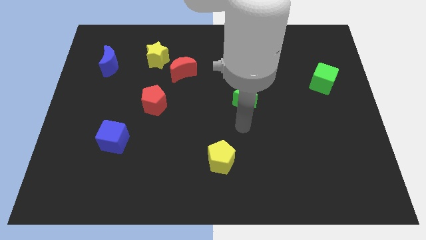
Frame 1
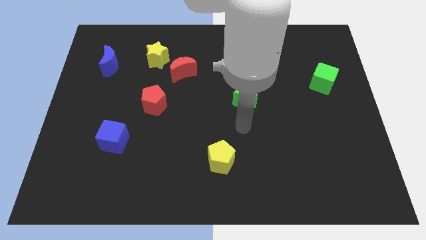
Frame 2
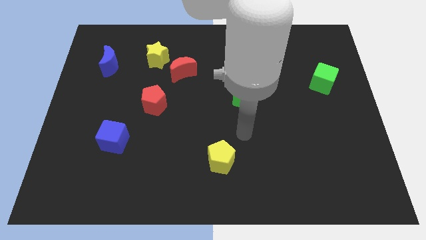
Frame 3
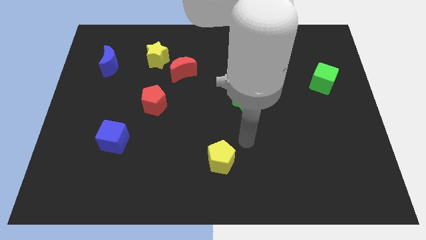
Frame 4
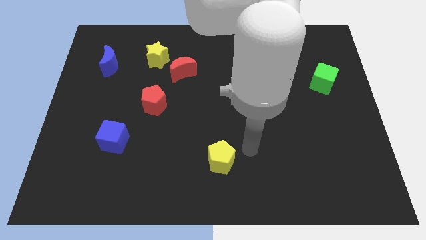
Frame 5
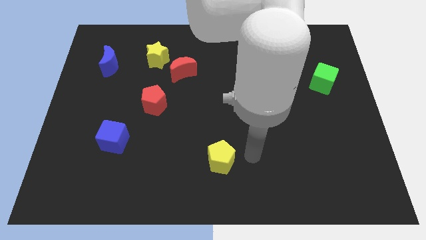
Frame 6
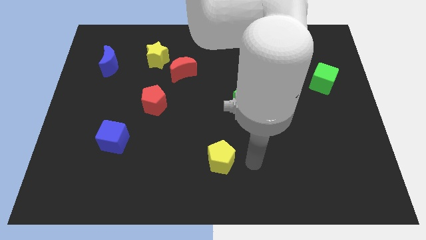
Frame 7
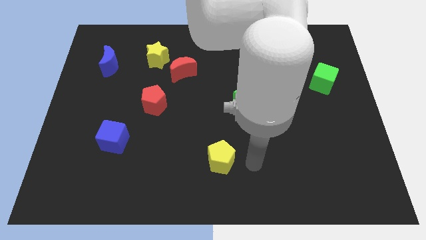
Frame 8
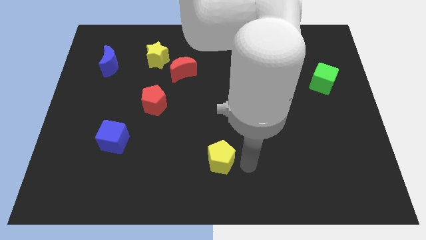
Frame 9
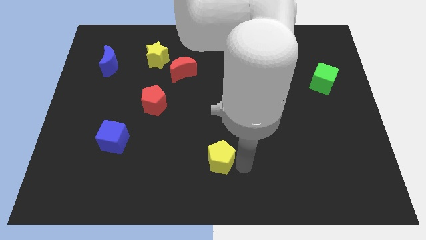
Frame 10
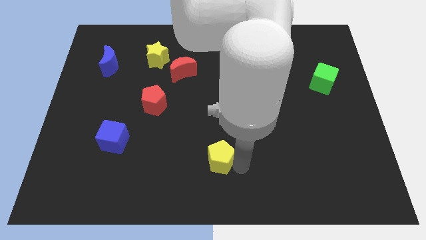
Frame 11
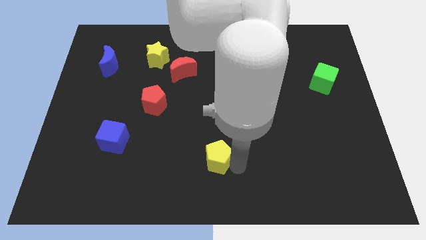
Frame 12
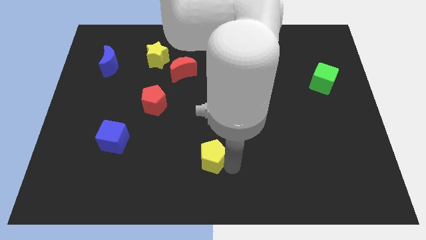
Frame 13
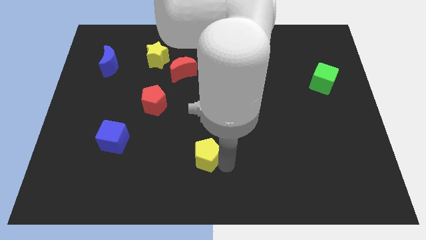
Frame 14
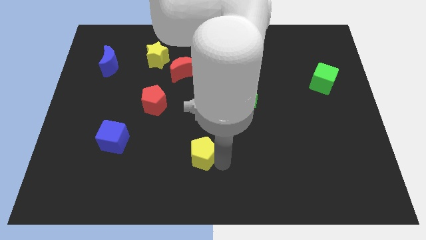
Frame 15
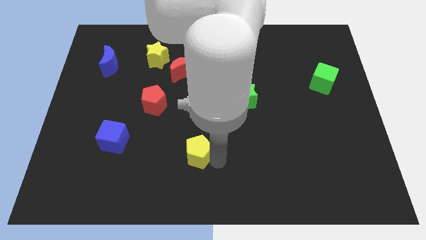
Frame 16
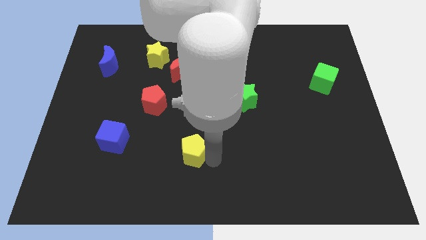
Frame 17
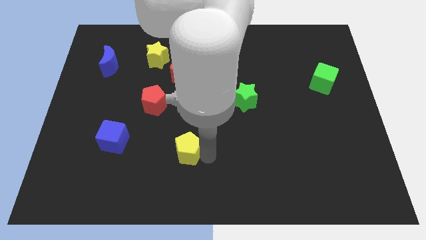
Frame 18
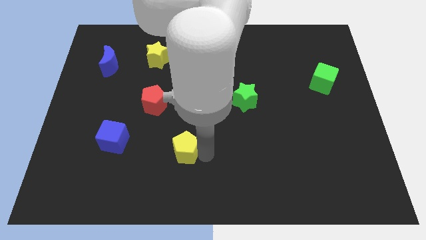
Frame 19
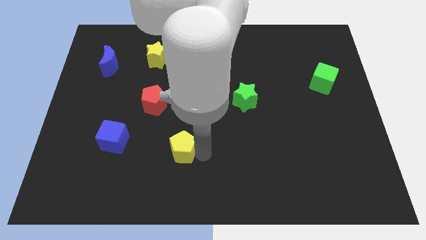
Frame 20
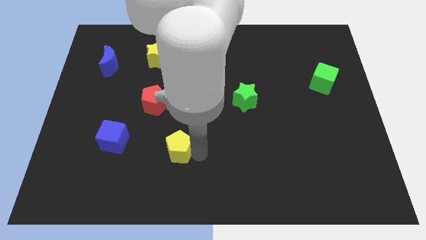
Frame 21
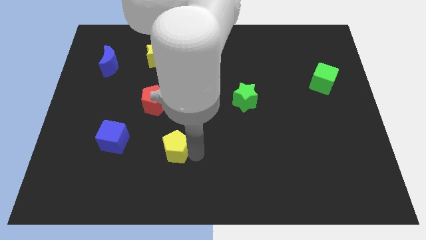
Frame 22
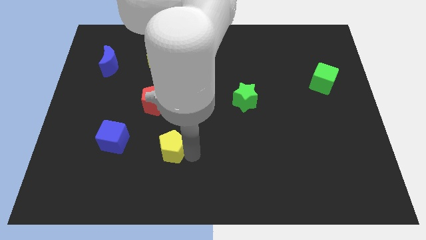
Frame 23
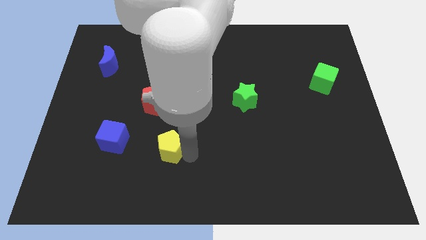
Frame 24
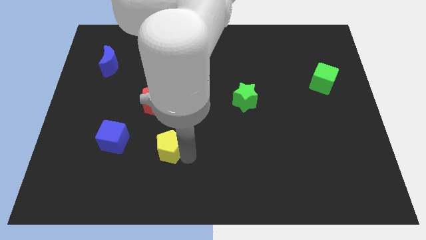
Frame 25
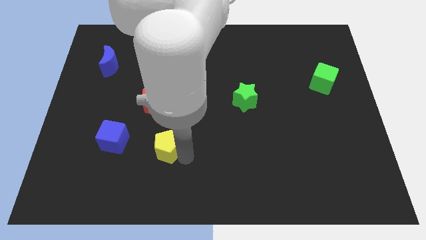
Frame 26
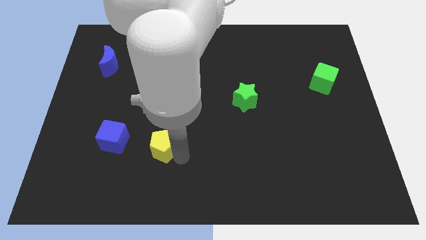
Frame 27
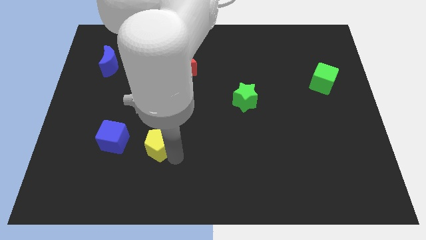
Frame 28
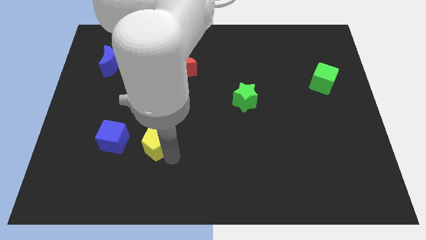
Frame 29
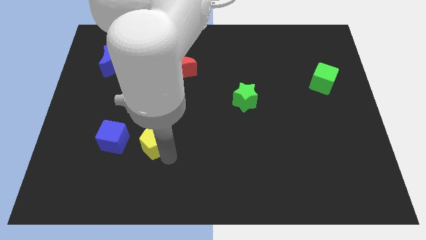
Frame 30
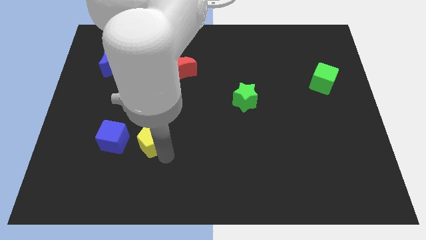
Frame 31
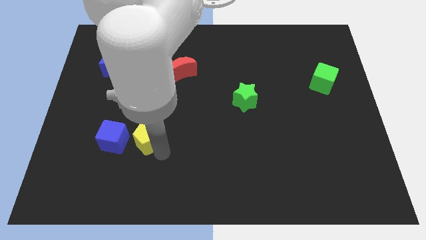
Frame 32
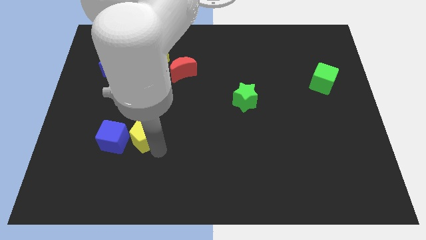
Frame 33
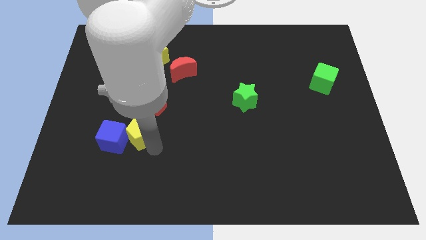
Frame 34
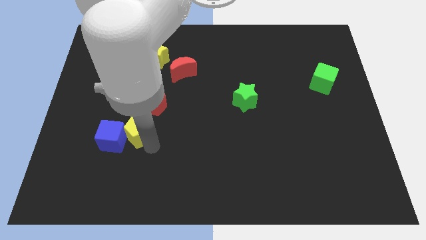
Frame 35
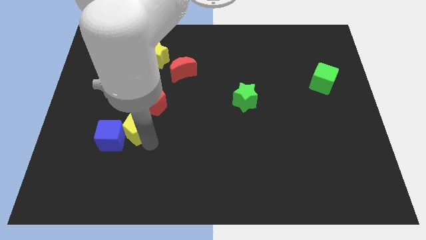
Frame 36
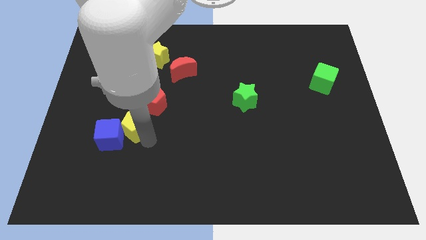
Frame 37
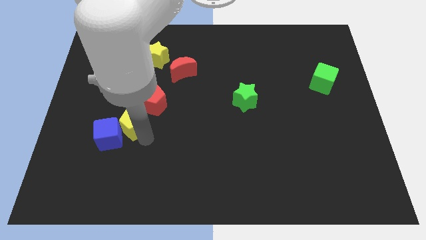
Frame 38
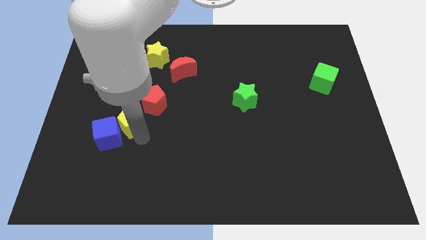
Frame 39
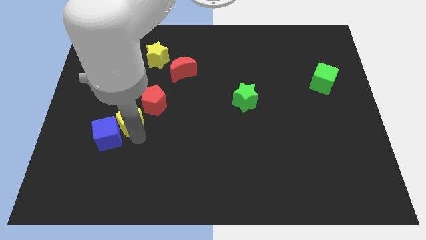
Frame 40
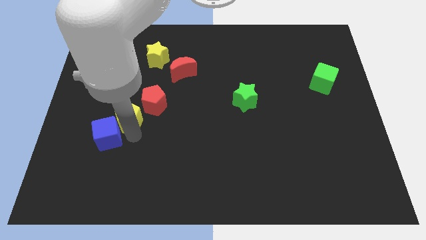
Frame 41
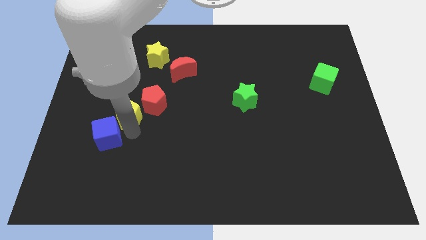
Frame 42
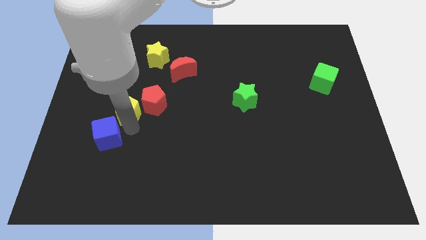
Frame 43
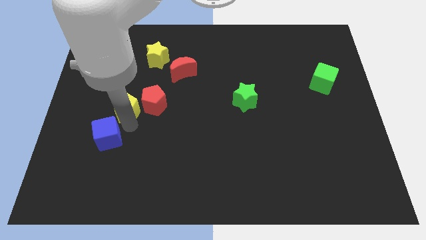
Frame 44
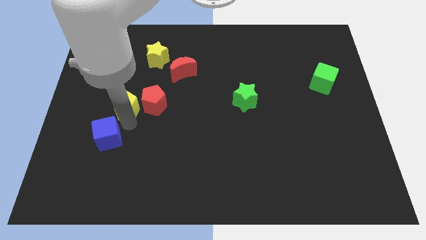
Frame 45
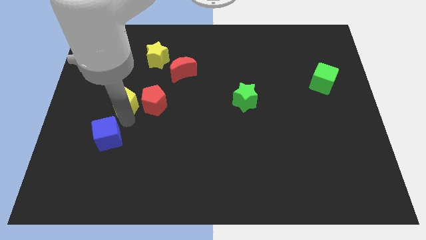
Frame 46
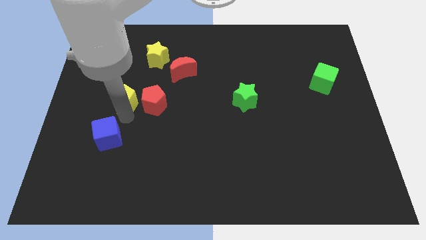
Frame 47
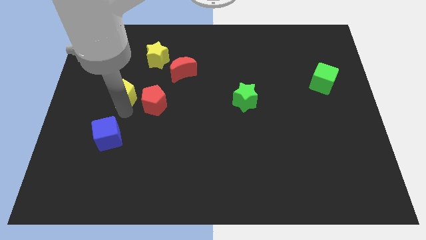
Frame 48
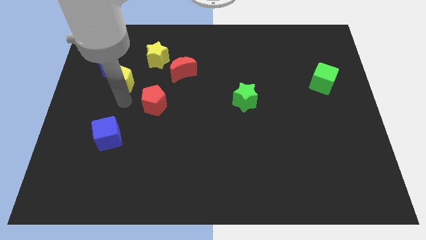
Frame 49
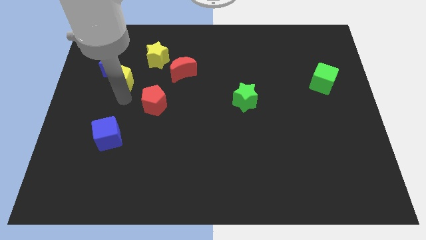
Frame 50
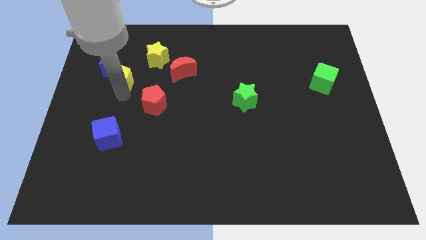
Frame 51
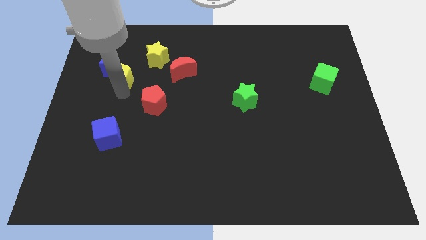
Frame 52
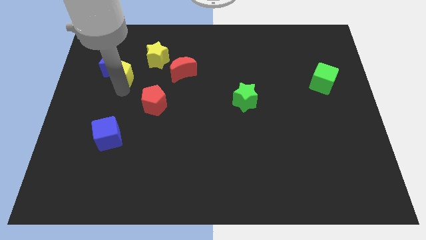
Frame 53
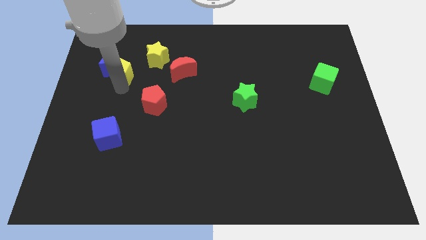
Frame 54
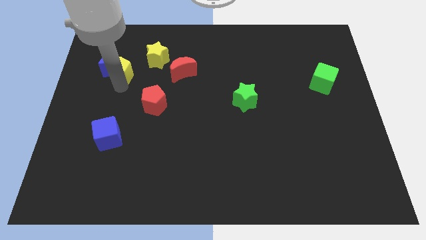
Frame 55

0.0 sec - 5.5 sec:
put the yellow pentagon to the blue moon

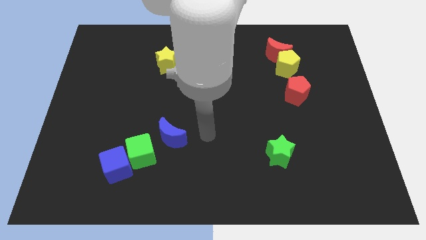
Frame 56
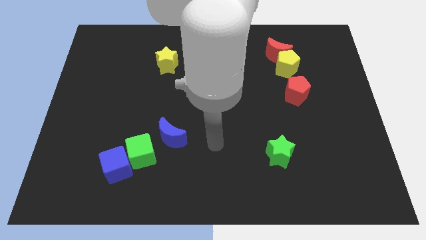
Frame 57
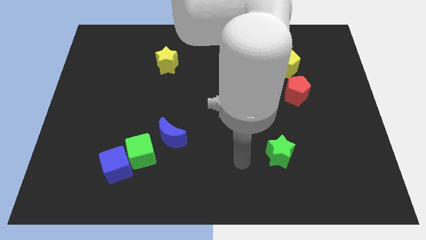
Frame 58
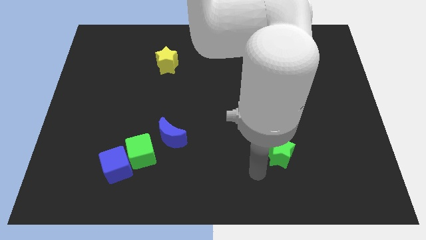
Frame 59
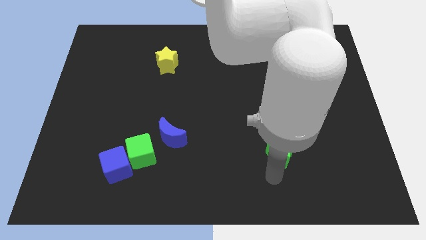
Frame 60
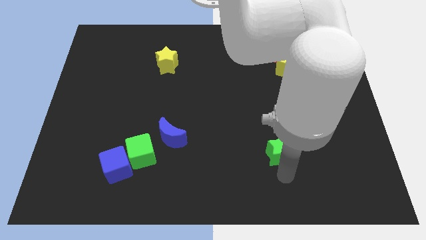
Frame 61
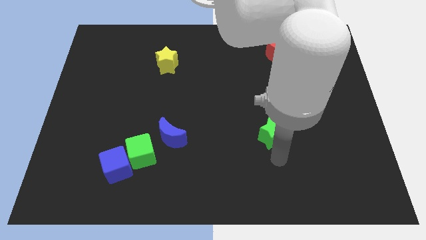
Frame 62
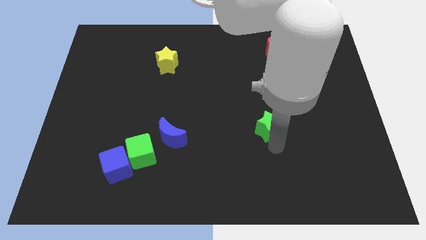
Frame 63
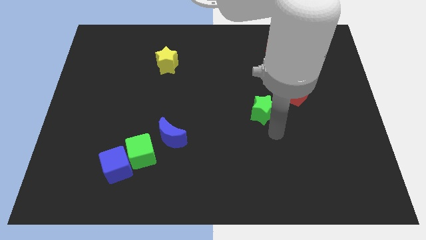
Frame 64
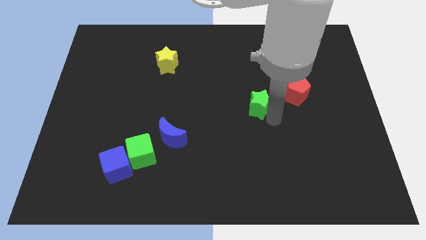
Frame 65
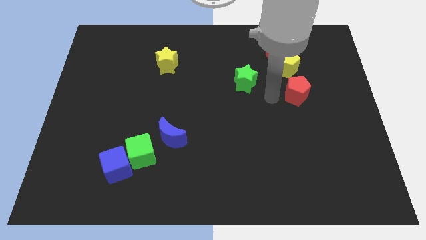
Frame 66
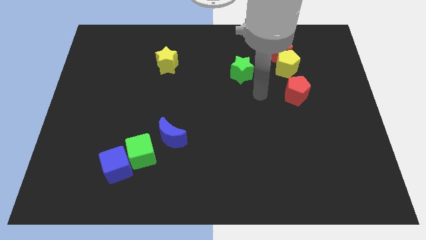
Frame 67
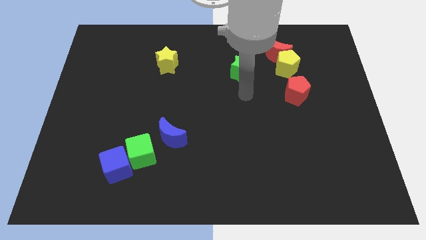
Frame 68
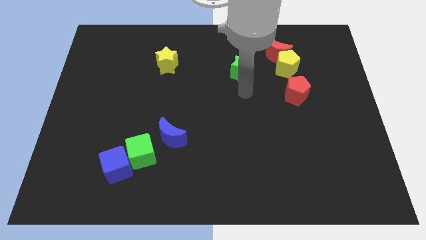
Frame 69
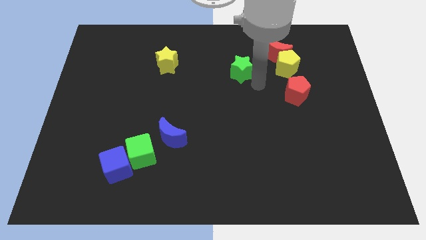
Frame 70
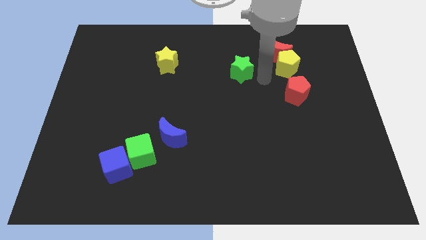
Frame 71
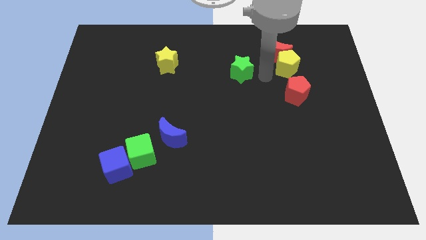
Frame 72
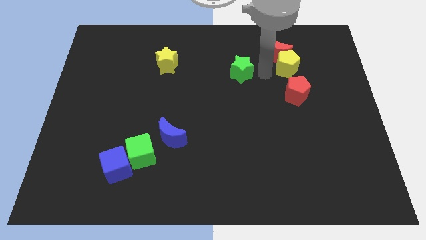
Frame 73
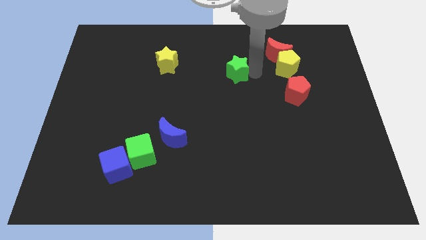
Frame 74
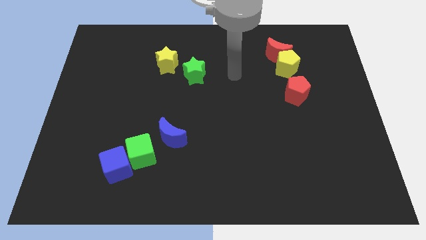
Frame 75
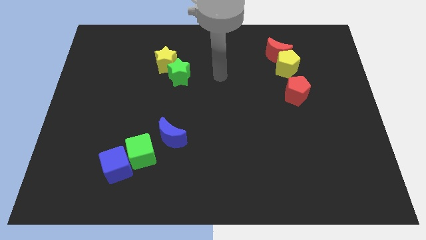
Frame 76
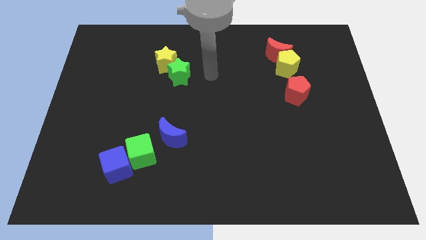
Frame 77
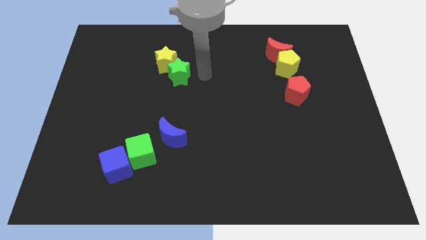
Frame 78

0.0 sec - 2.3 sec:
push the green star to the yellow star
